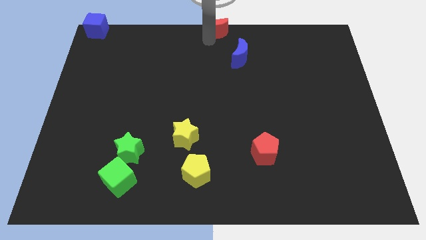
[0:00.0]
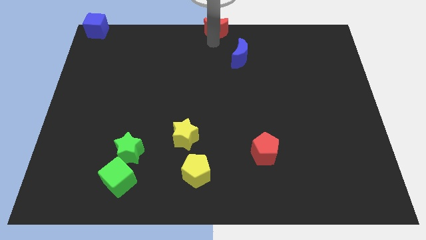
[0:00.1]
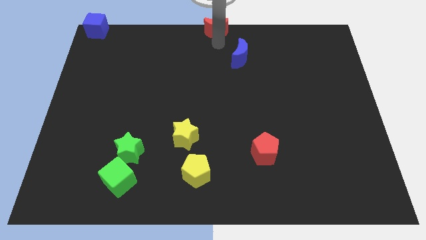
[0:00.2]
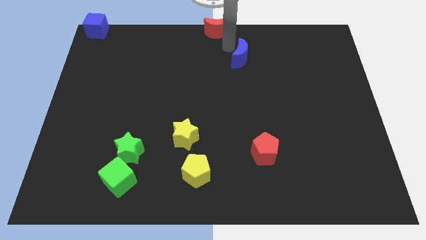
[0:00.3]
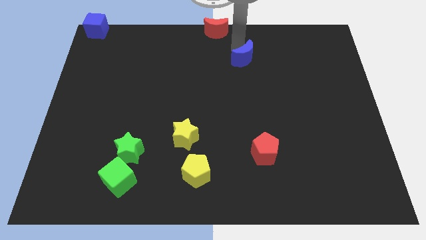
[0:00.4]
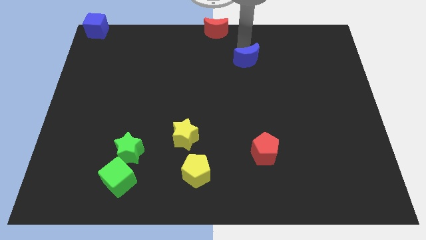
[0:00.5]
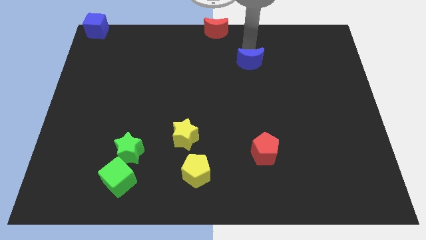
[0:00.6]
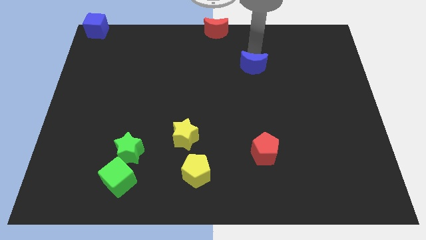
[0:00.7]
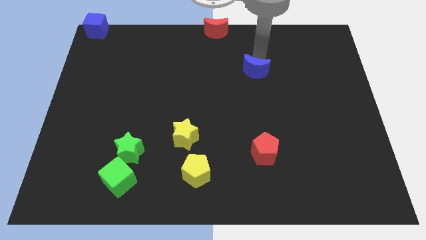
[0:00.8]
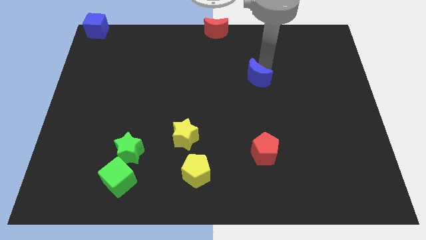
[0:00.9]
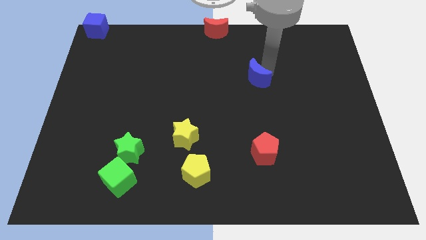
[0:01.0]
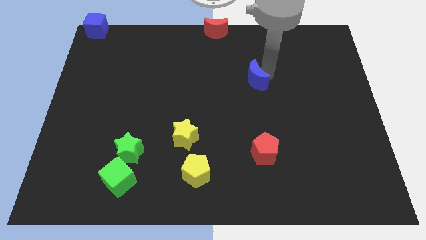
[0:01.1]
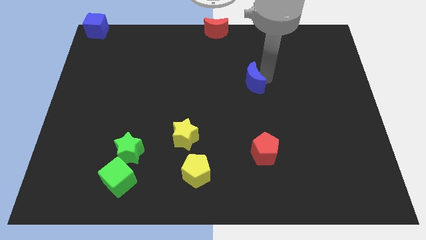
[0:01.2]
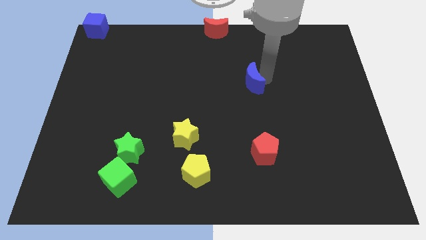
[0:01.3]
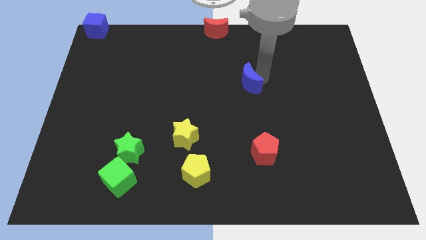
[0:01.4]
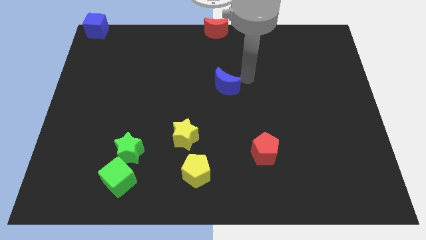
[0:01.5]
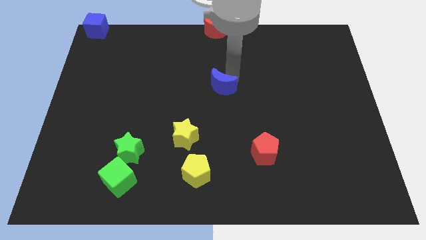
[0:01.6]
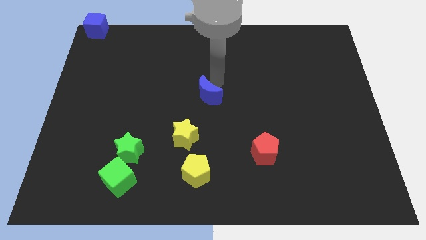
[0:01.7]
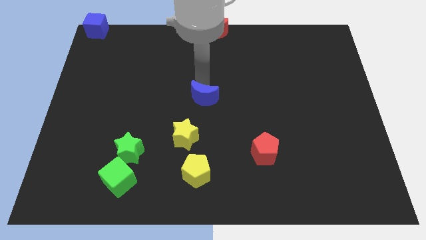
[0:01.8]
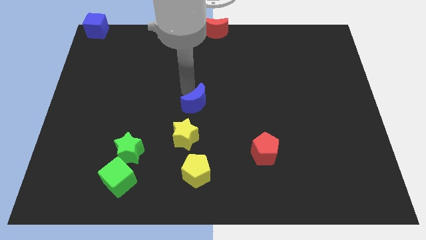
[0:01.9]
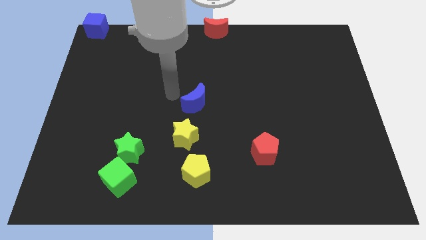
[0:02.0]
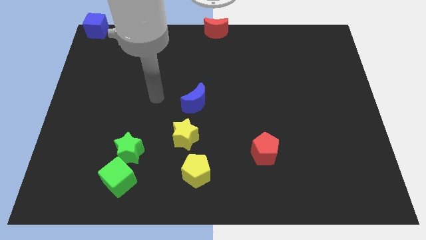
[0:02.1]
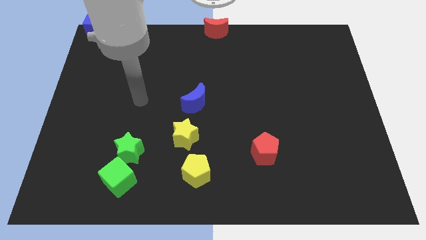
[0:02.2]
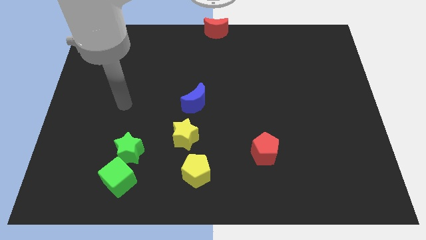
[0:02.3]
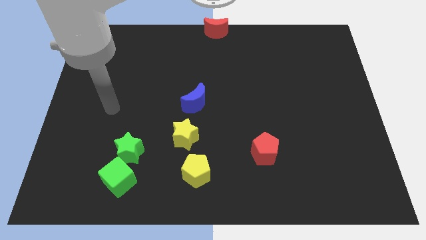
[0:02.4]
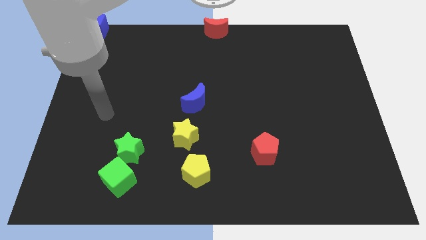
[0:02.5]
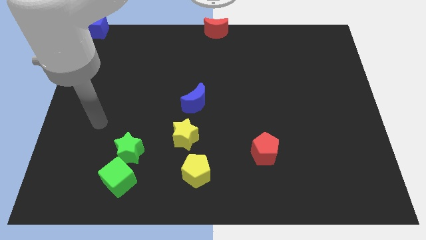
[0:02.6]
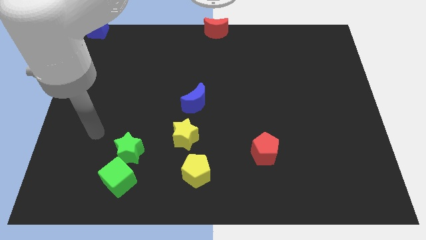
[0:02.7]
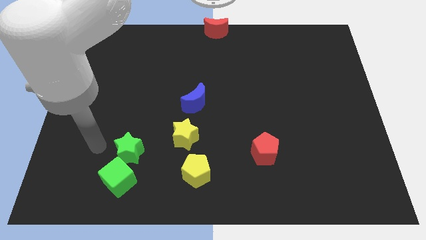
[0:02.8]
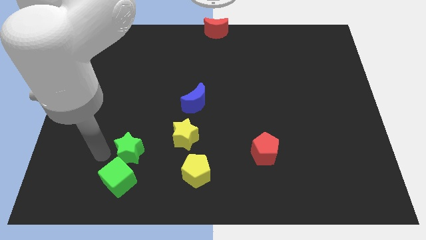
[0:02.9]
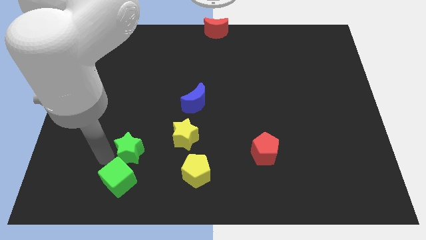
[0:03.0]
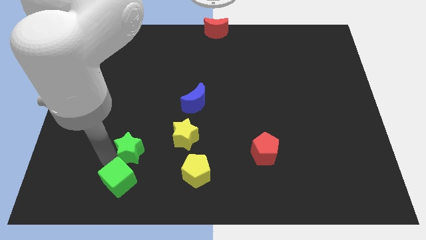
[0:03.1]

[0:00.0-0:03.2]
move the blue crescent to the top side of the yellow star

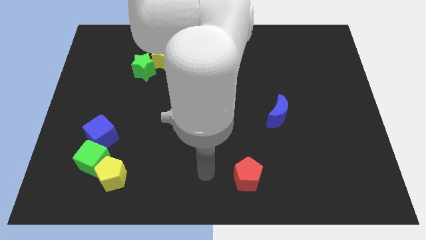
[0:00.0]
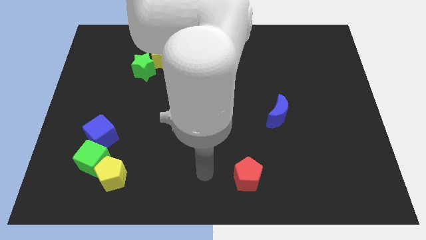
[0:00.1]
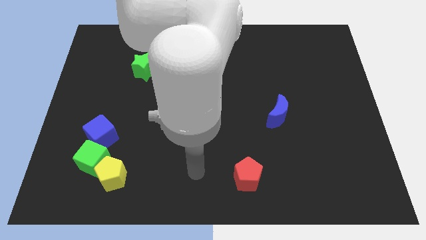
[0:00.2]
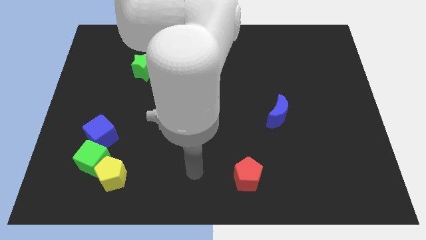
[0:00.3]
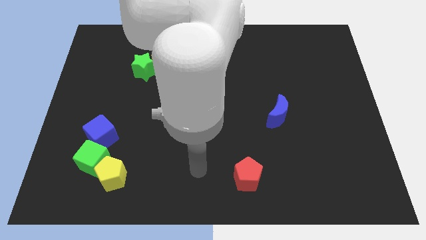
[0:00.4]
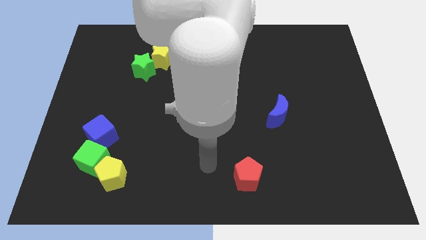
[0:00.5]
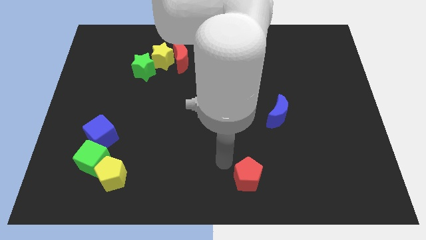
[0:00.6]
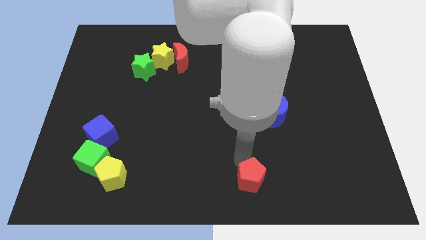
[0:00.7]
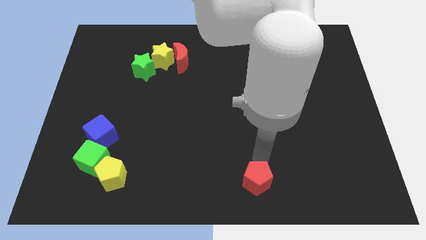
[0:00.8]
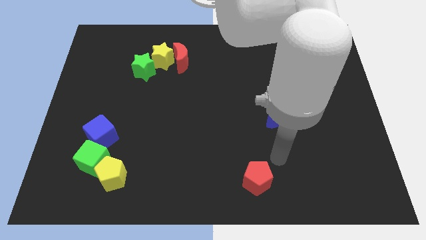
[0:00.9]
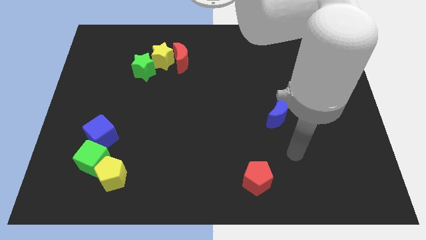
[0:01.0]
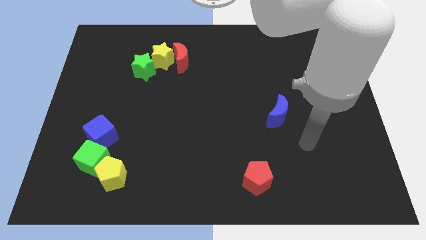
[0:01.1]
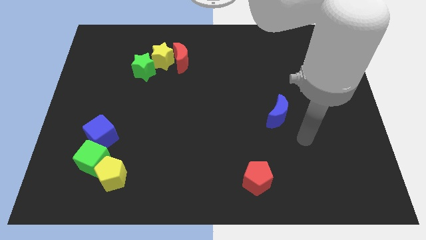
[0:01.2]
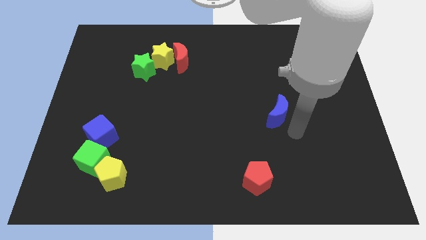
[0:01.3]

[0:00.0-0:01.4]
push the red pentagon slightly to the right side of the board

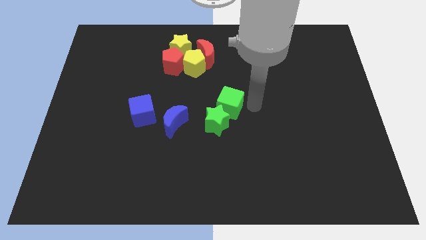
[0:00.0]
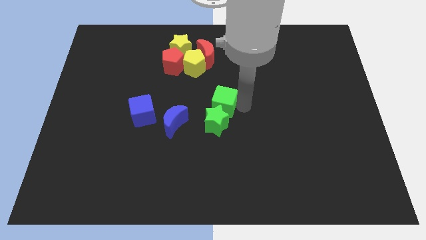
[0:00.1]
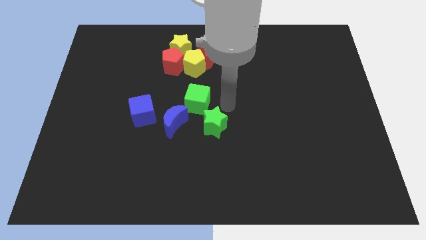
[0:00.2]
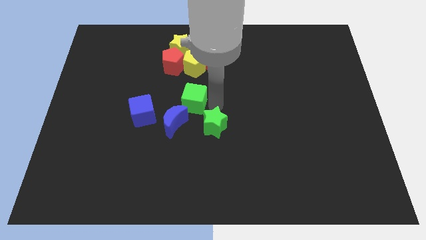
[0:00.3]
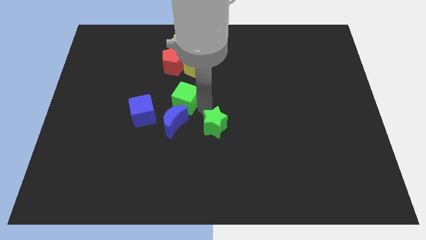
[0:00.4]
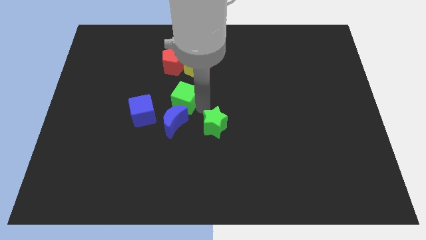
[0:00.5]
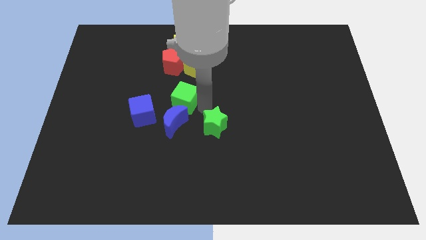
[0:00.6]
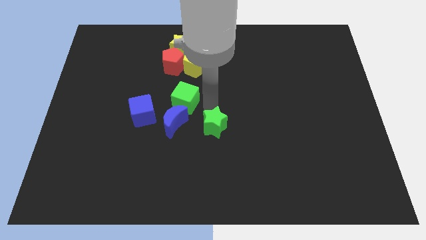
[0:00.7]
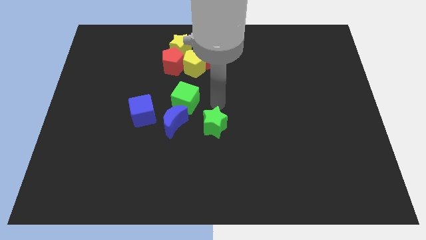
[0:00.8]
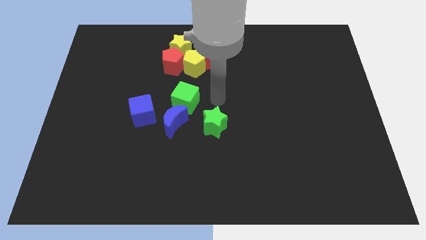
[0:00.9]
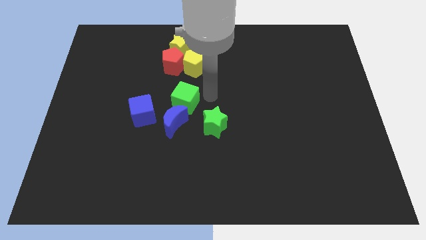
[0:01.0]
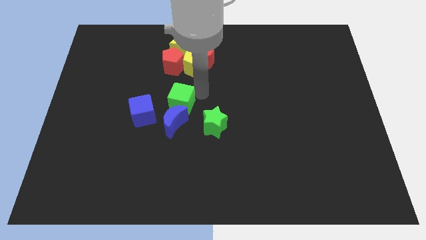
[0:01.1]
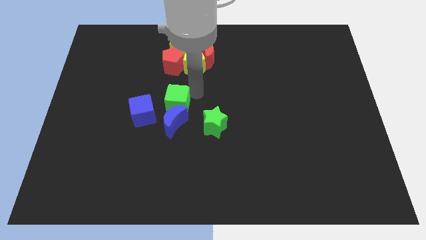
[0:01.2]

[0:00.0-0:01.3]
push the green cube to the top of the blue crescent

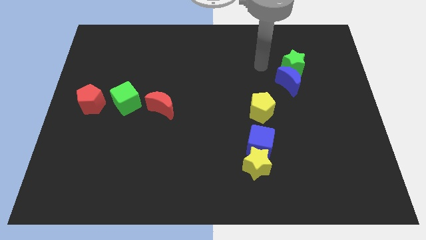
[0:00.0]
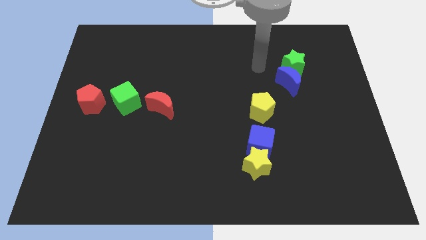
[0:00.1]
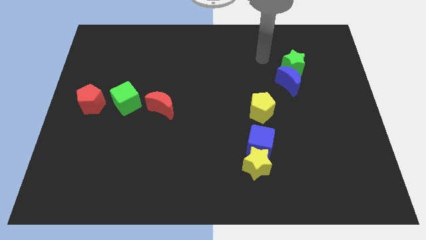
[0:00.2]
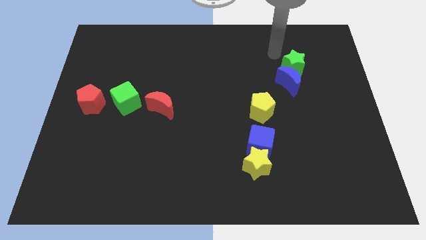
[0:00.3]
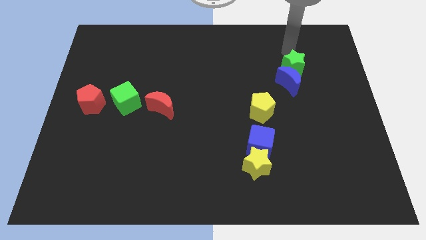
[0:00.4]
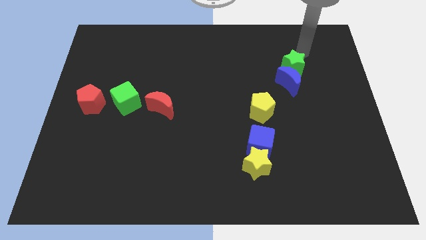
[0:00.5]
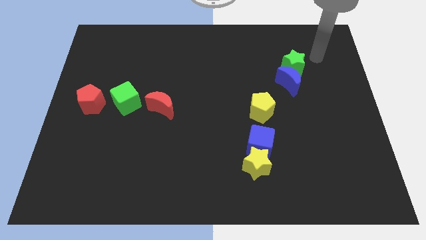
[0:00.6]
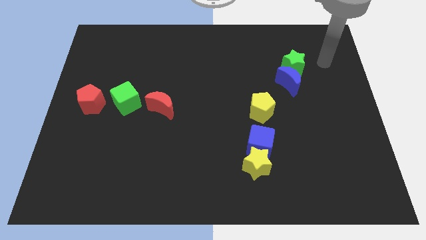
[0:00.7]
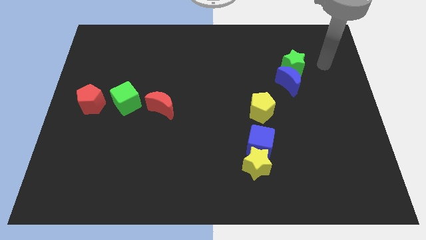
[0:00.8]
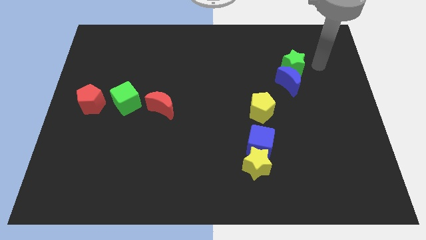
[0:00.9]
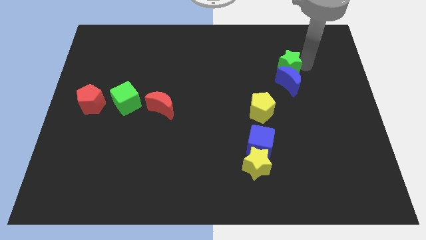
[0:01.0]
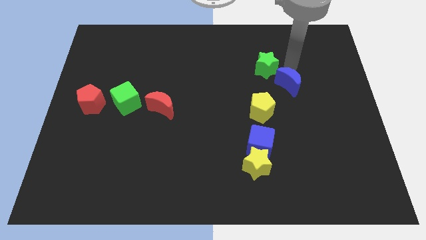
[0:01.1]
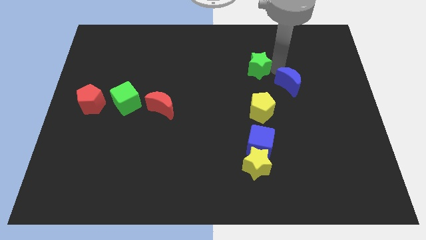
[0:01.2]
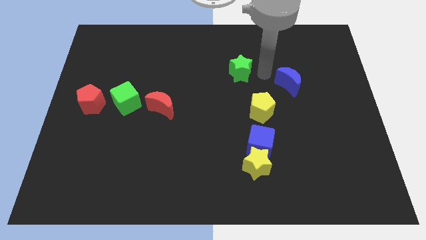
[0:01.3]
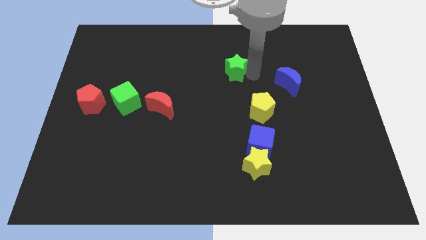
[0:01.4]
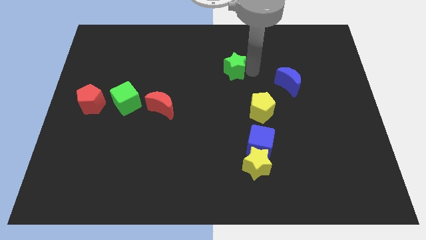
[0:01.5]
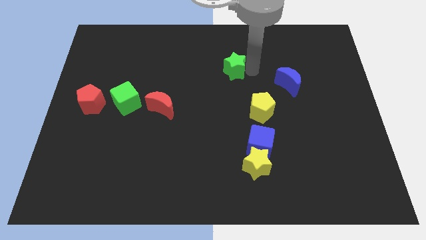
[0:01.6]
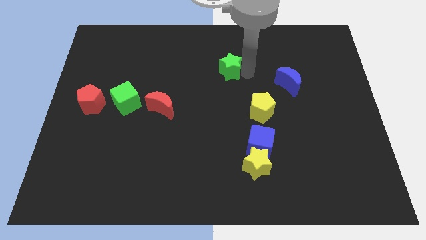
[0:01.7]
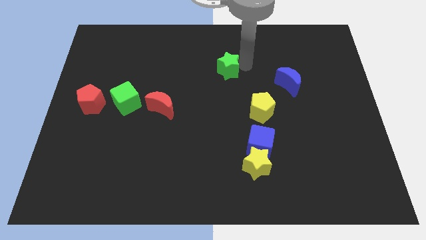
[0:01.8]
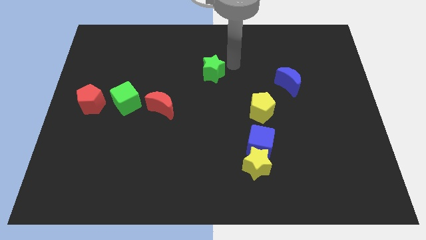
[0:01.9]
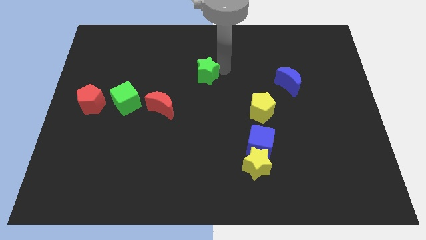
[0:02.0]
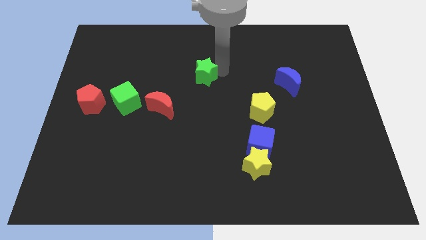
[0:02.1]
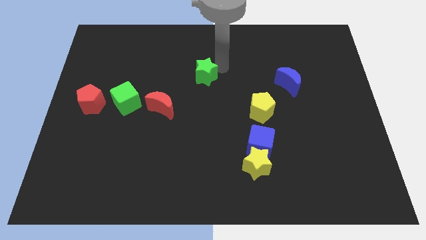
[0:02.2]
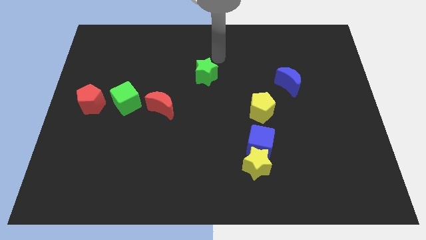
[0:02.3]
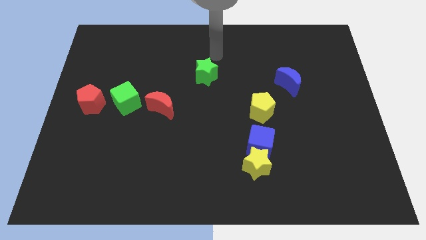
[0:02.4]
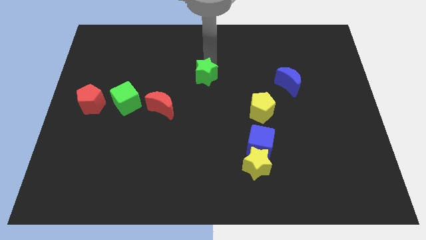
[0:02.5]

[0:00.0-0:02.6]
move the green star away from the blue crescent

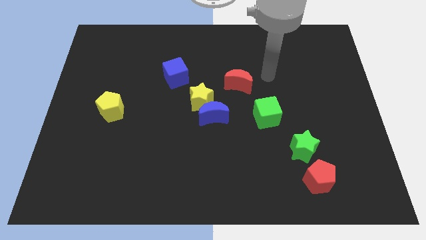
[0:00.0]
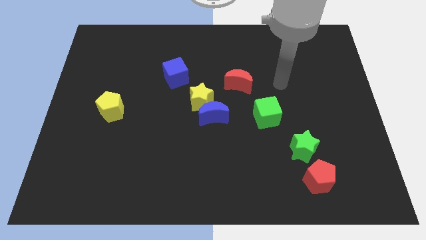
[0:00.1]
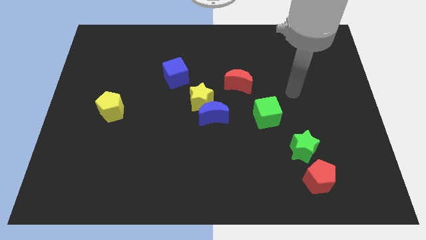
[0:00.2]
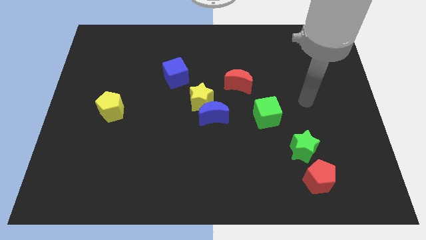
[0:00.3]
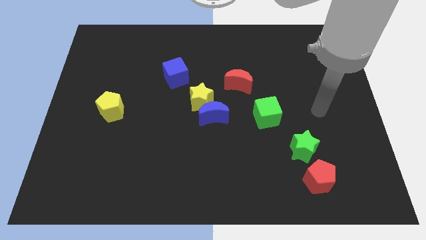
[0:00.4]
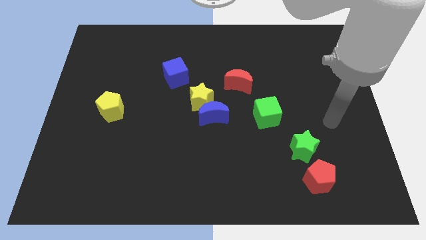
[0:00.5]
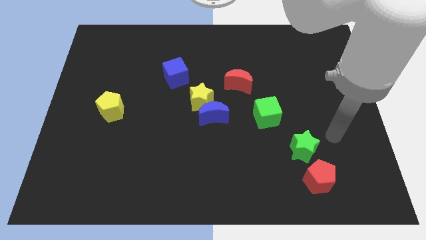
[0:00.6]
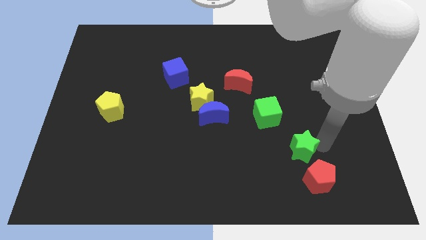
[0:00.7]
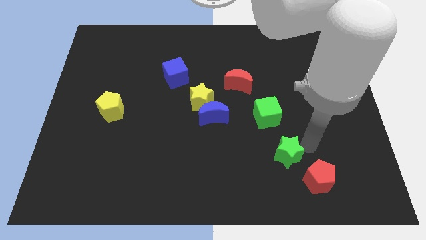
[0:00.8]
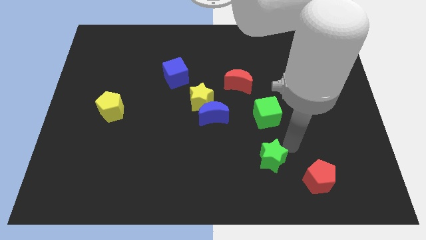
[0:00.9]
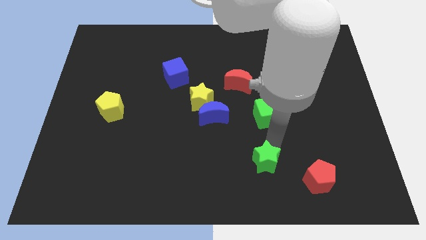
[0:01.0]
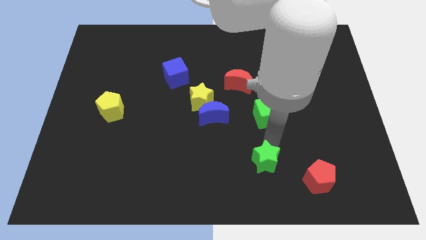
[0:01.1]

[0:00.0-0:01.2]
put the green star below the green cube
